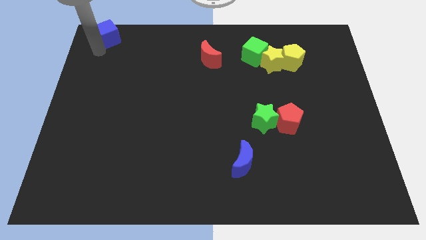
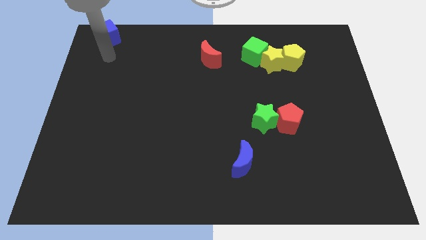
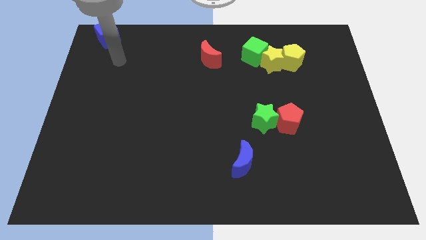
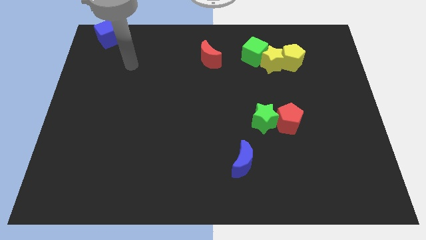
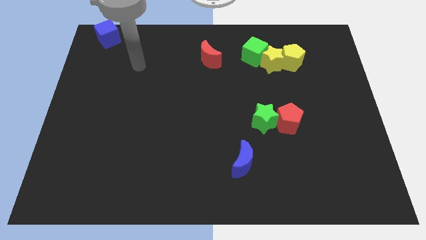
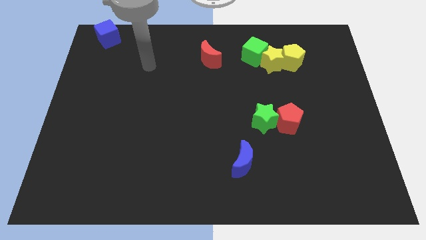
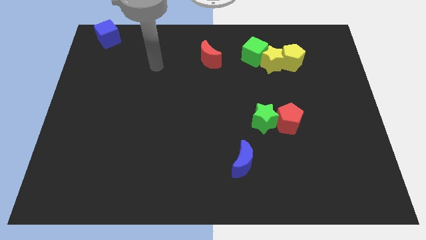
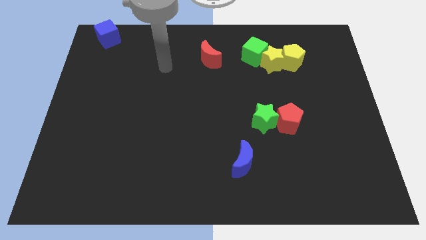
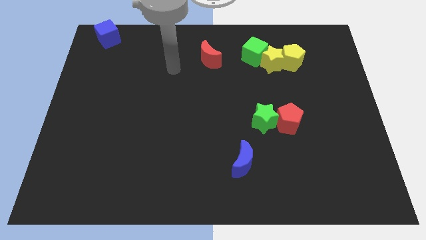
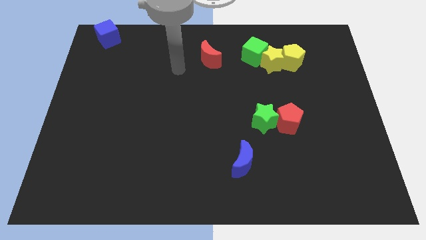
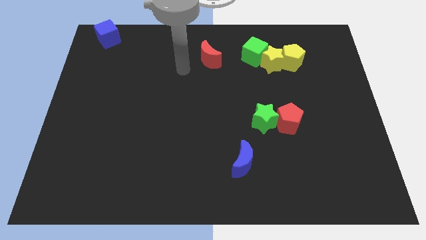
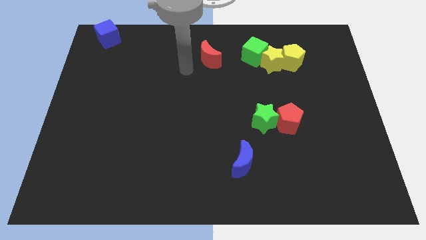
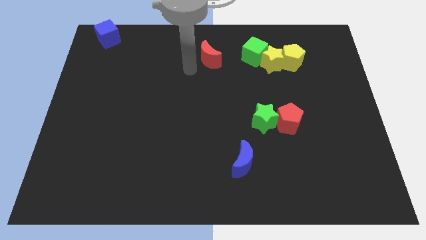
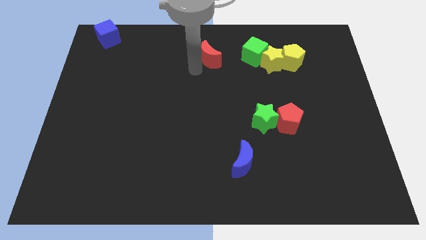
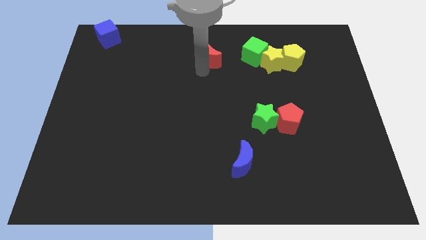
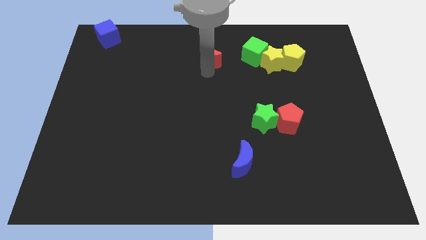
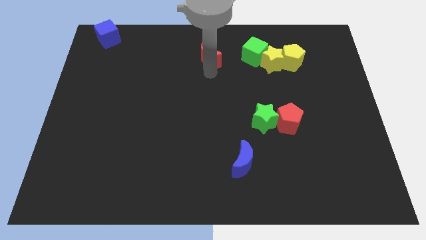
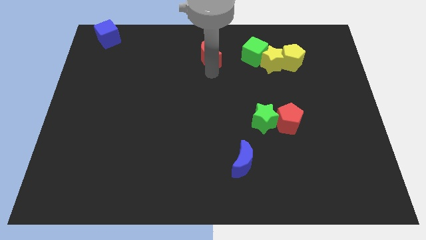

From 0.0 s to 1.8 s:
point your arm at the bottom of the red crescent

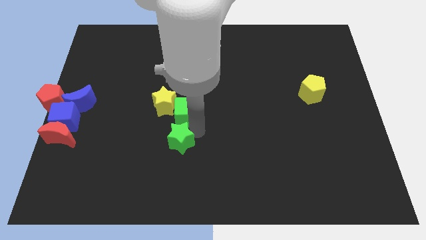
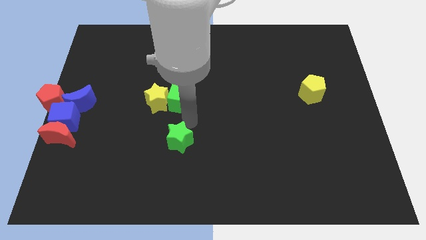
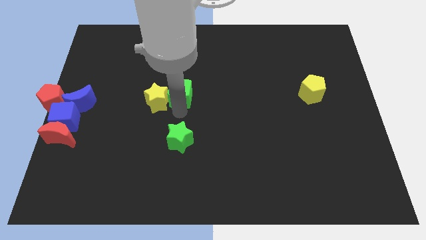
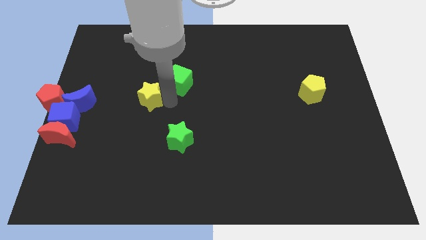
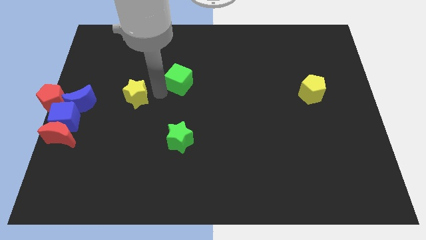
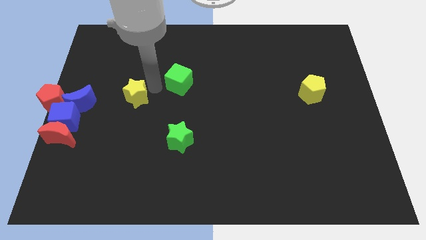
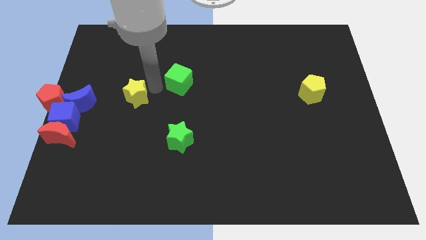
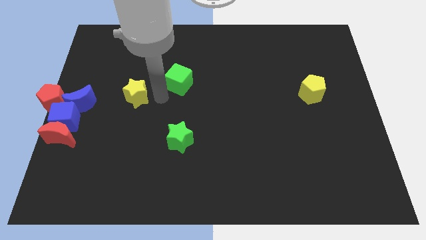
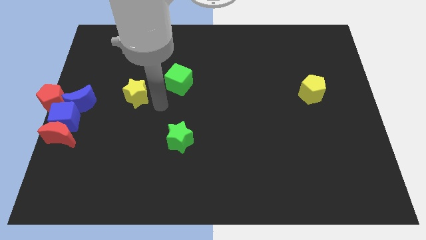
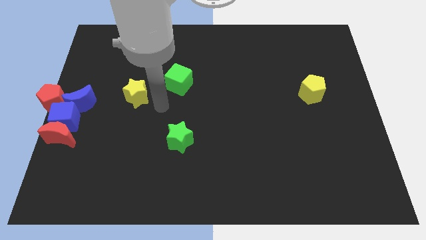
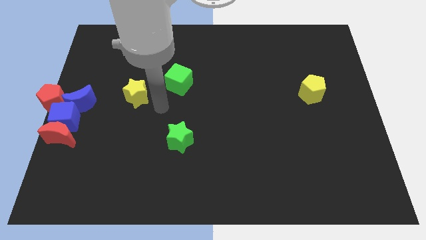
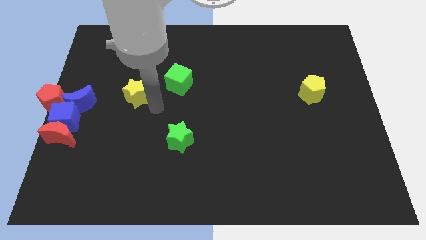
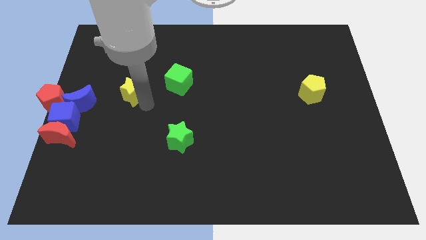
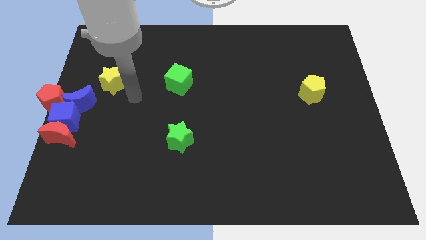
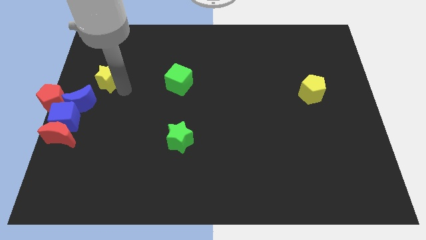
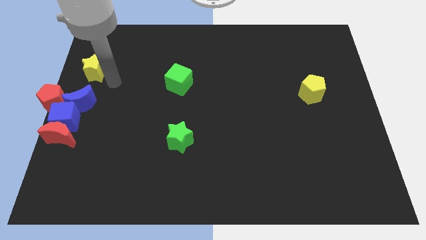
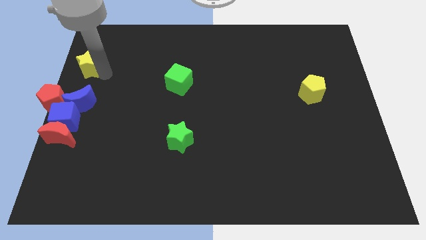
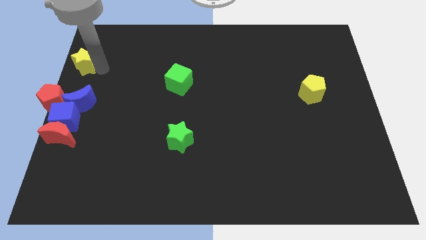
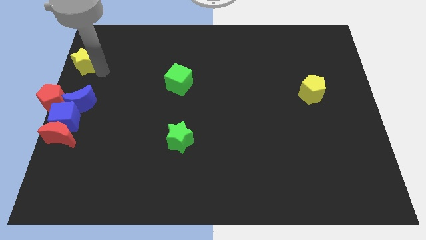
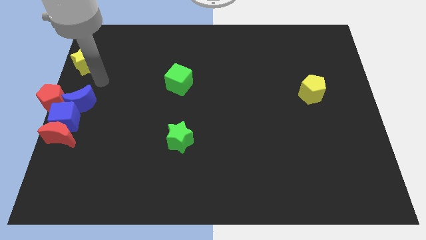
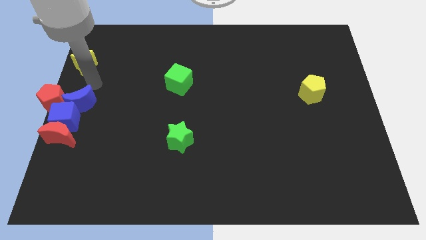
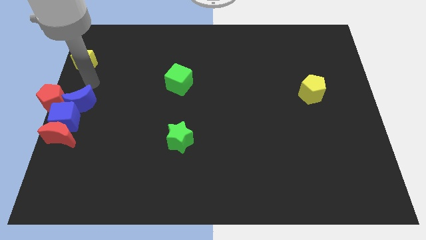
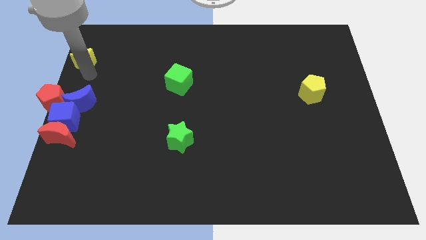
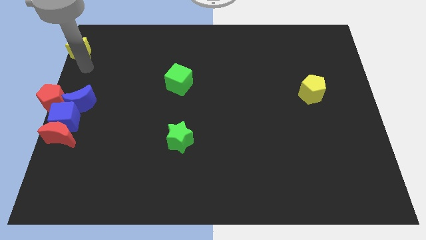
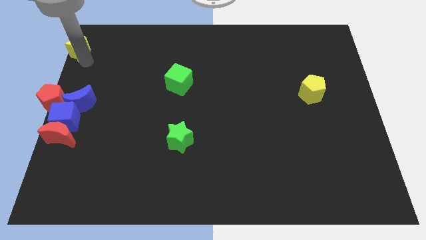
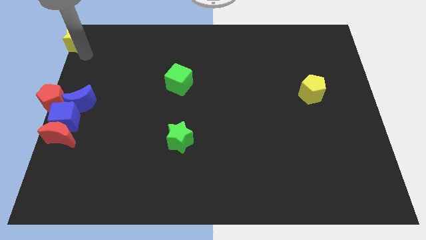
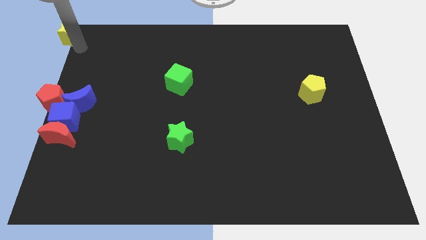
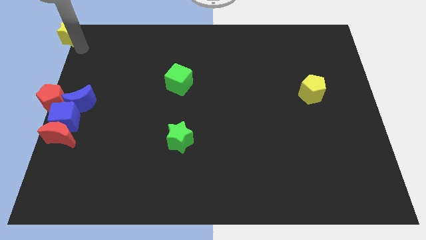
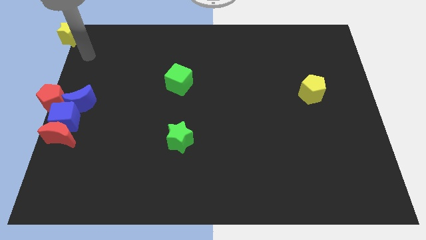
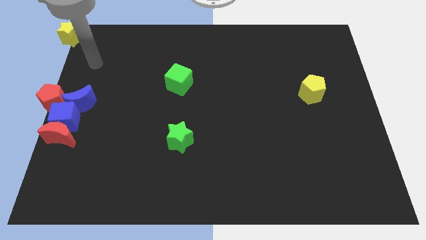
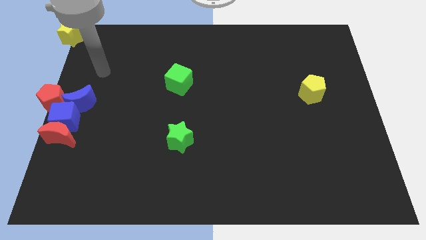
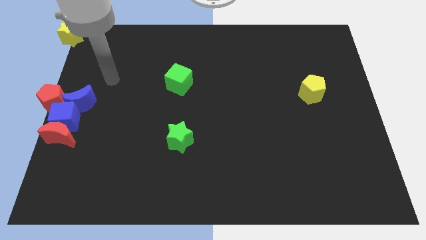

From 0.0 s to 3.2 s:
separate yellow star and green cube from green star

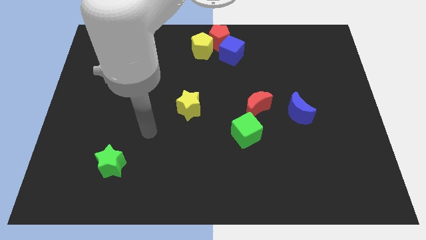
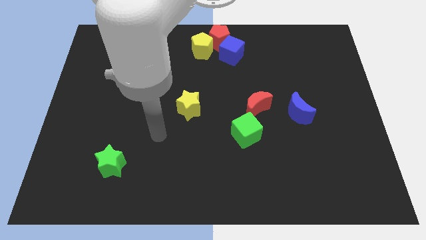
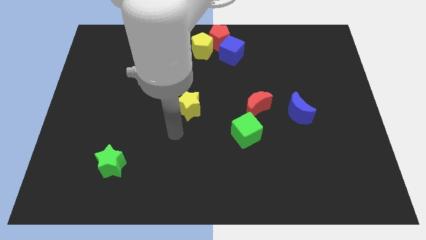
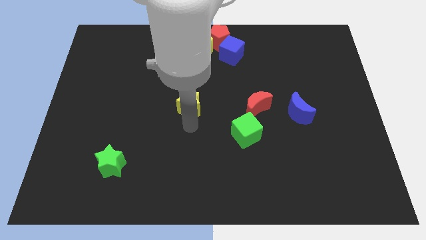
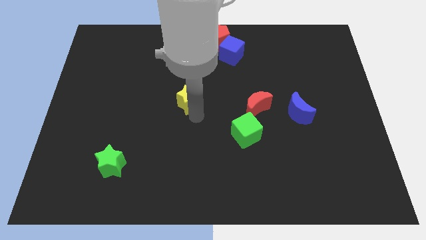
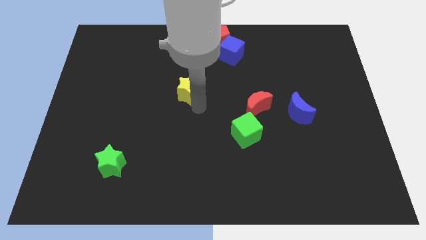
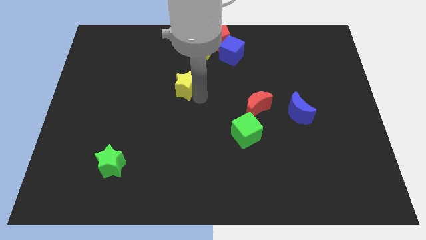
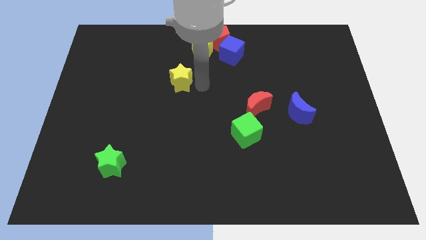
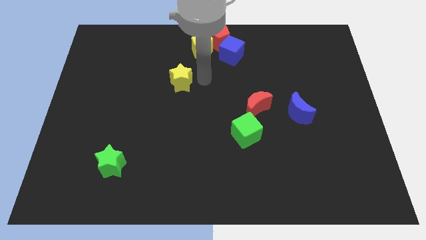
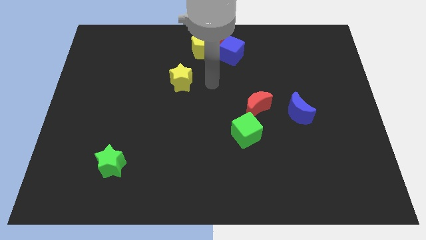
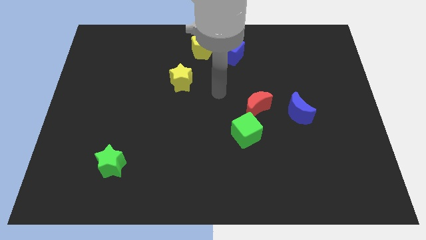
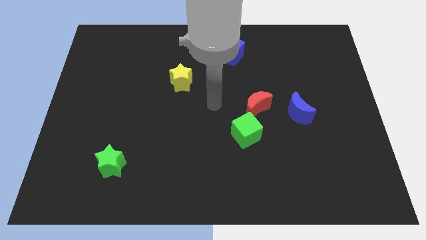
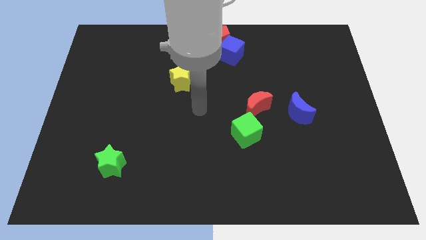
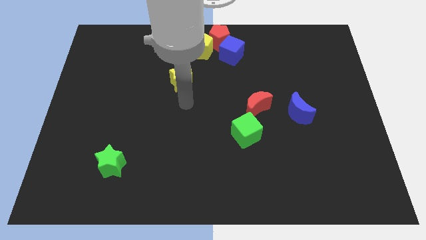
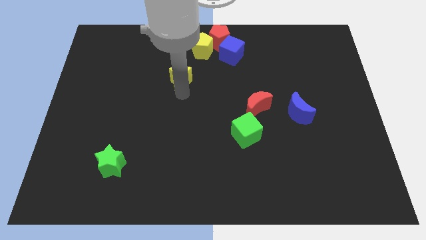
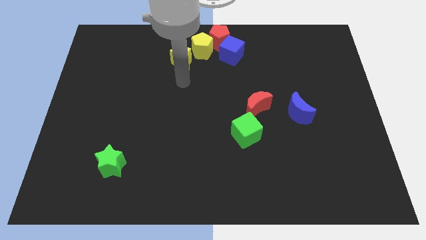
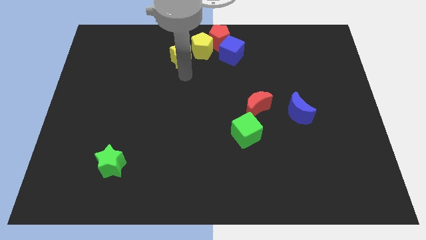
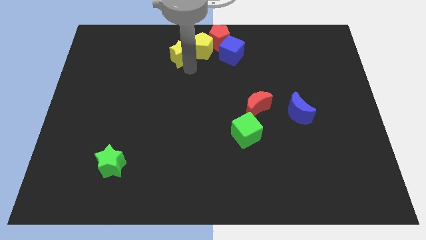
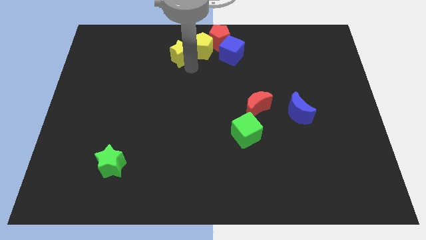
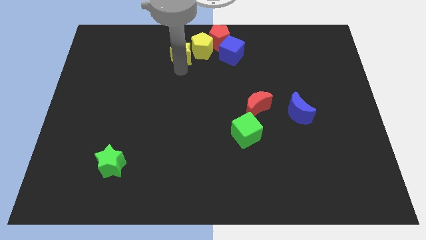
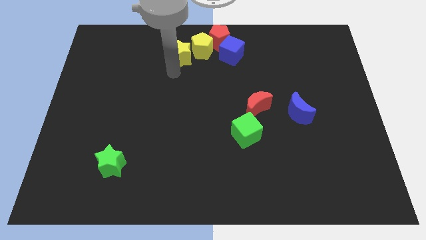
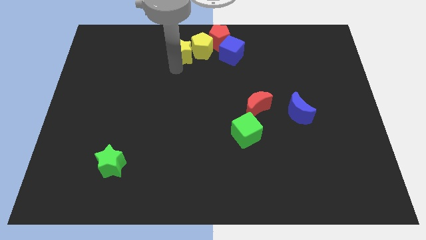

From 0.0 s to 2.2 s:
push the yellow star close to the yellow pentagon

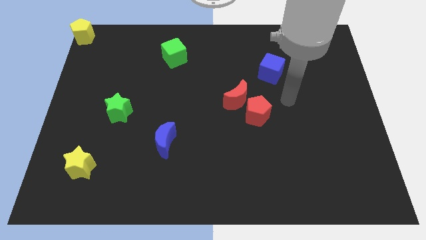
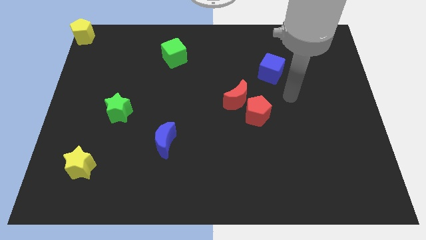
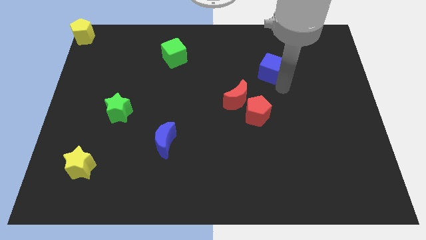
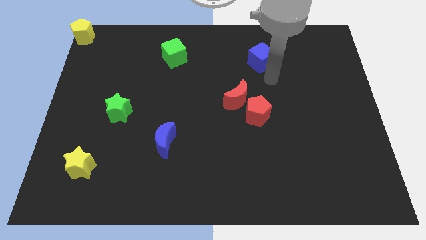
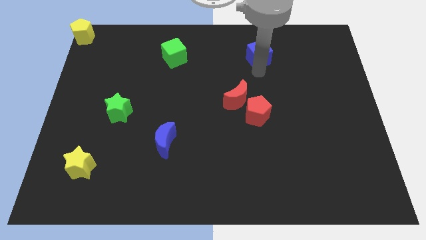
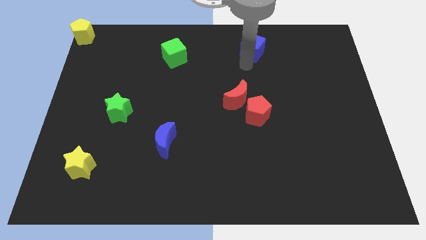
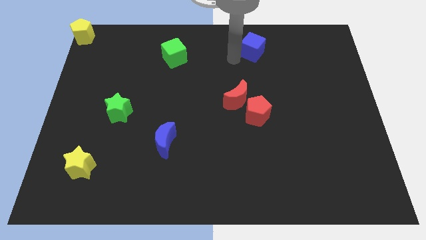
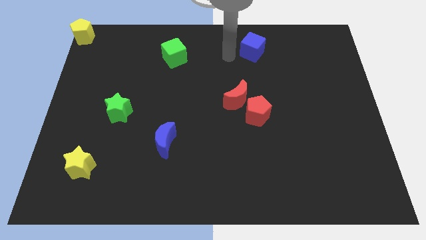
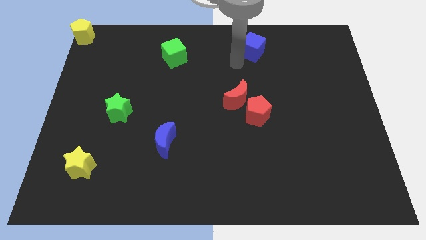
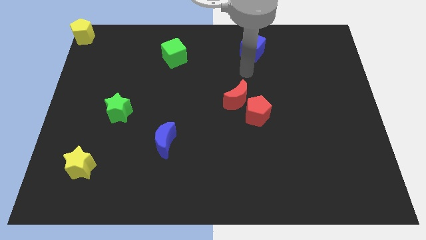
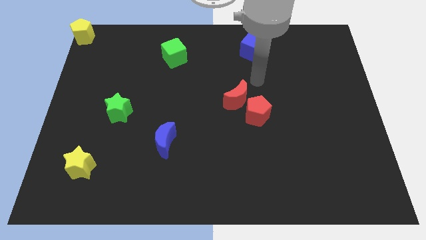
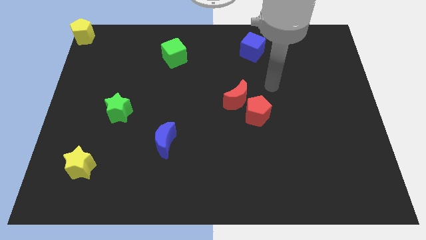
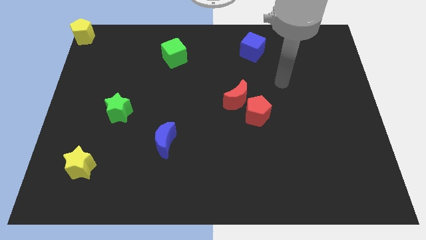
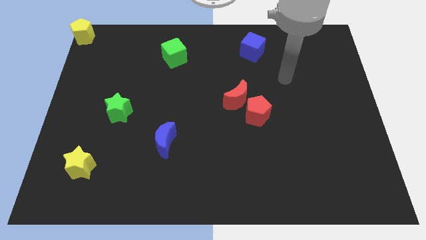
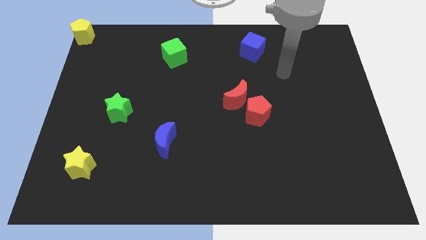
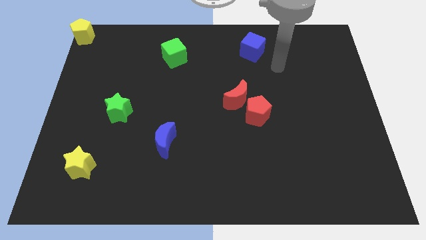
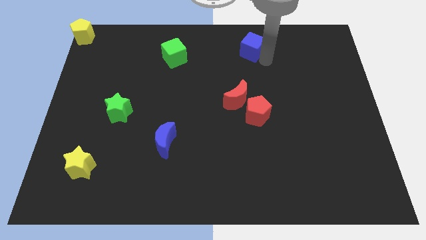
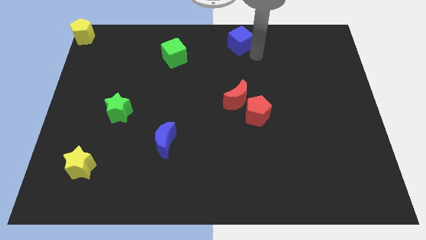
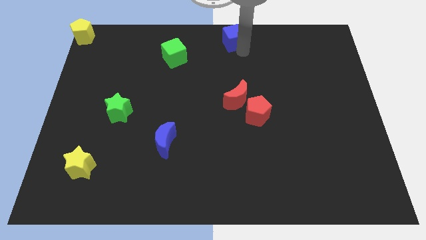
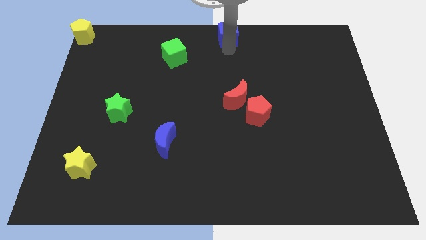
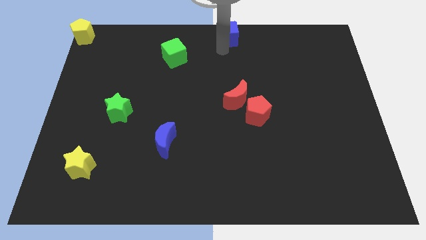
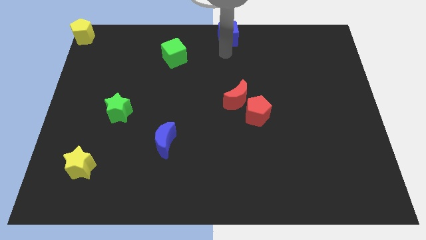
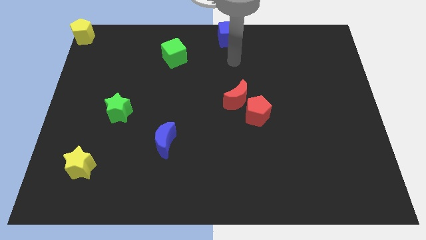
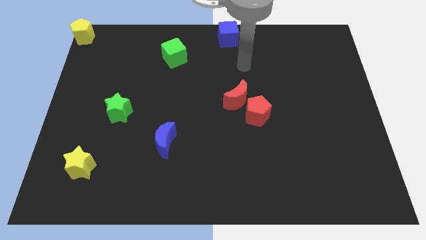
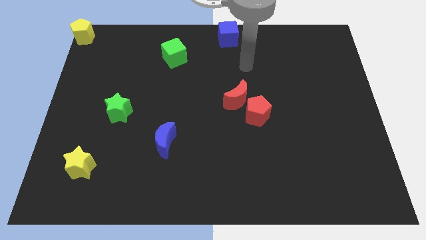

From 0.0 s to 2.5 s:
push the blue cube to the top center of the board
